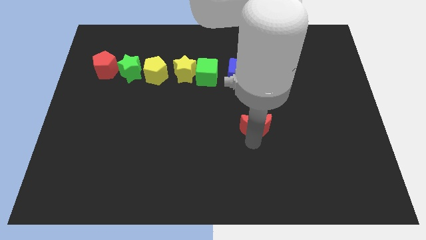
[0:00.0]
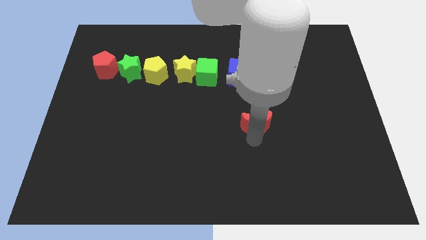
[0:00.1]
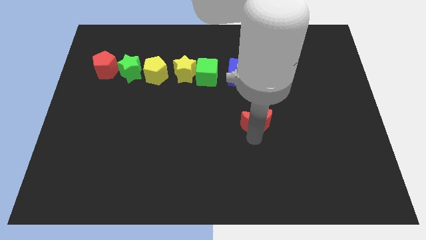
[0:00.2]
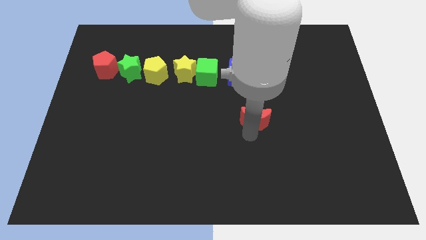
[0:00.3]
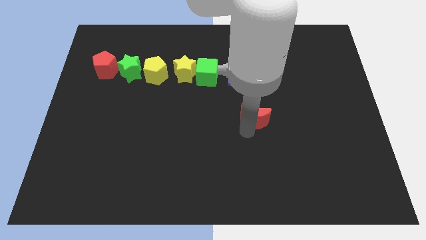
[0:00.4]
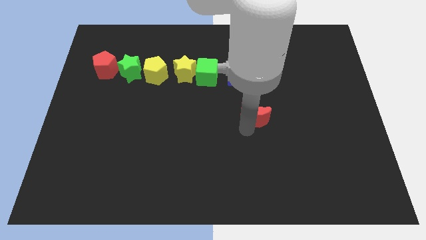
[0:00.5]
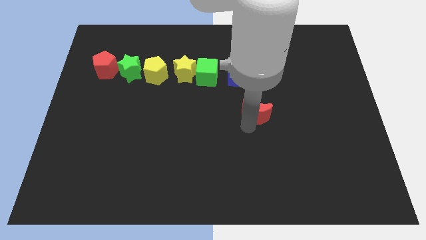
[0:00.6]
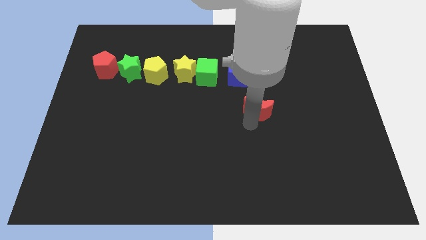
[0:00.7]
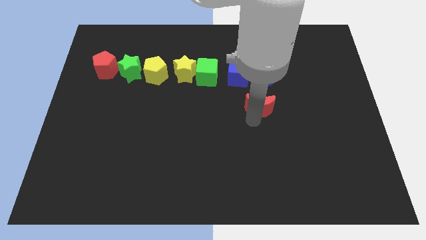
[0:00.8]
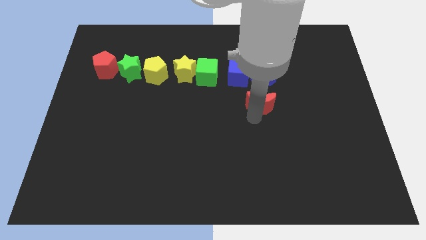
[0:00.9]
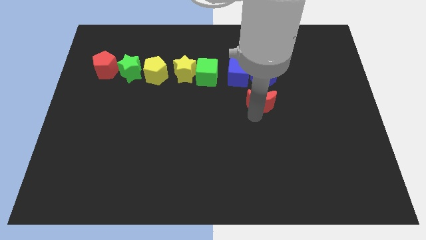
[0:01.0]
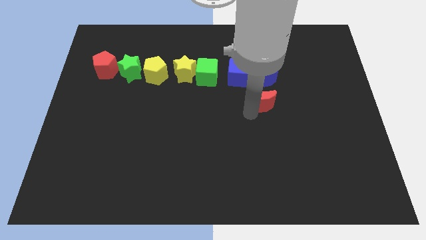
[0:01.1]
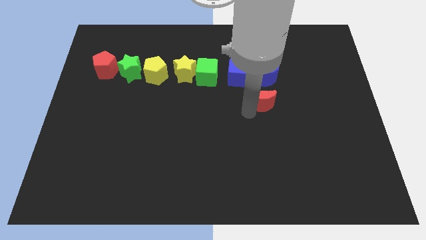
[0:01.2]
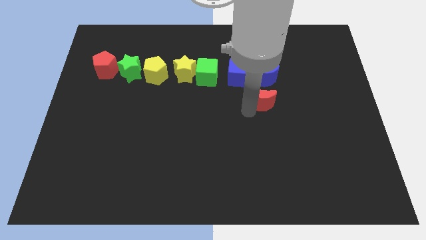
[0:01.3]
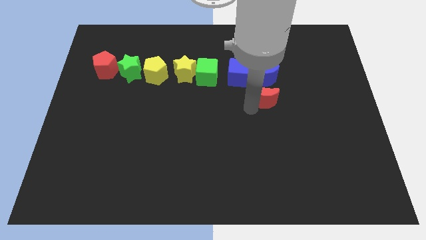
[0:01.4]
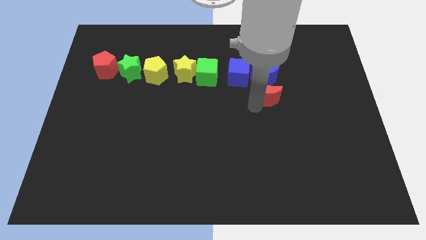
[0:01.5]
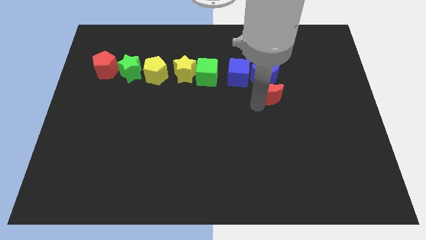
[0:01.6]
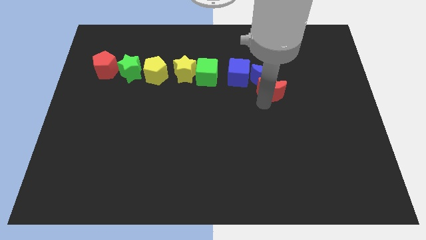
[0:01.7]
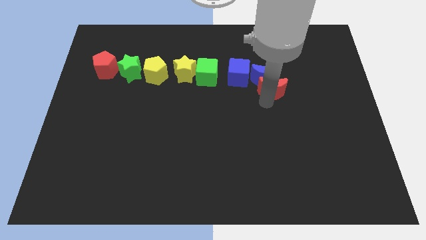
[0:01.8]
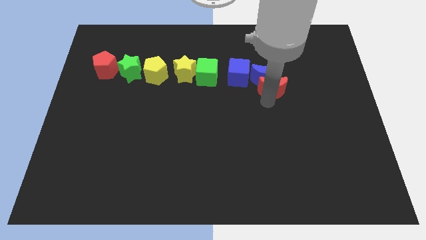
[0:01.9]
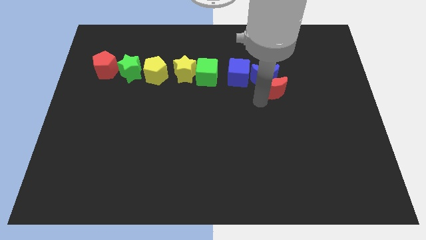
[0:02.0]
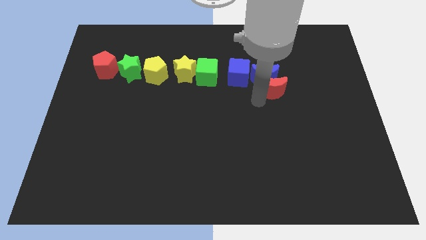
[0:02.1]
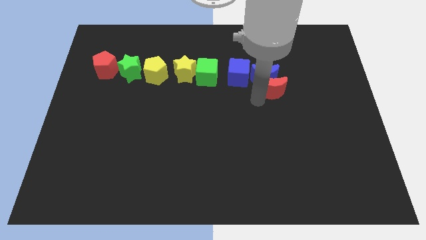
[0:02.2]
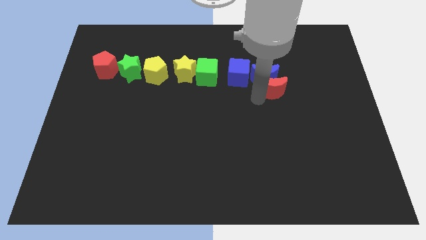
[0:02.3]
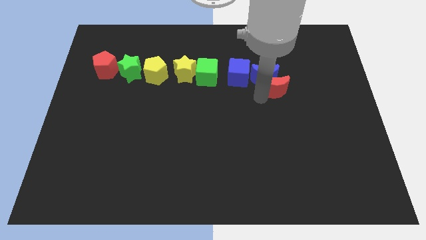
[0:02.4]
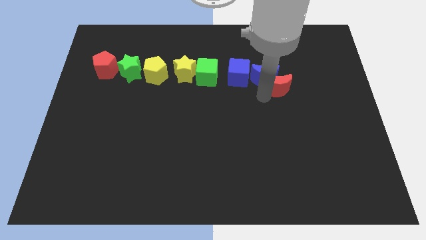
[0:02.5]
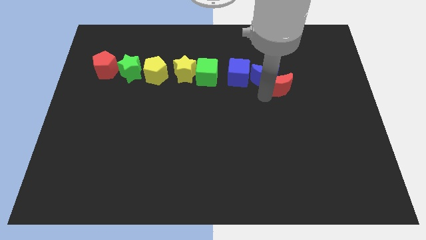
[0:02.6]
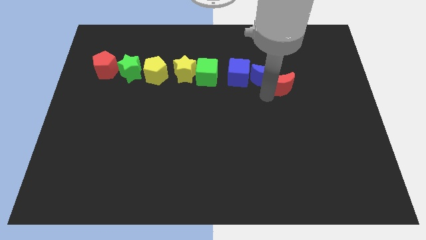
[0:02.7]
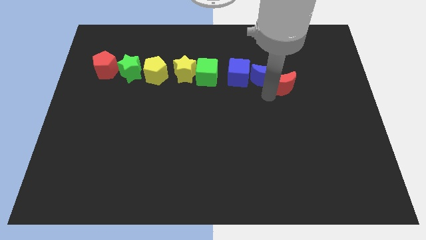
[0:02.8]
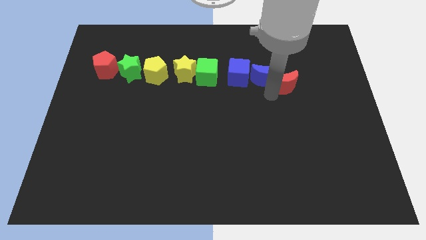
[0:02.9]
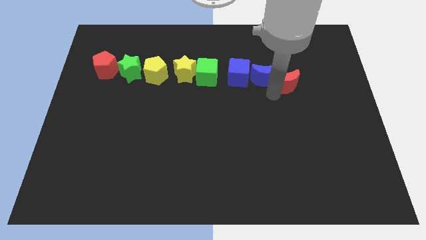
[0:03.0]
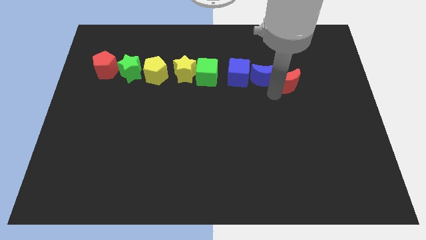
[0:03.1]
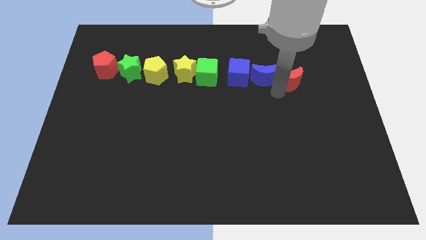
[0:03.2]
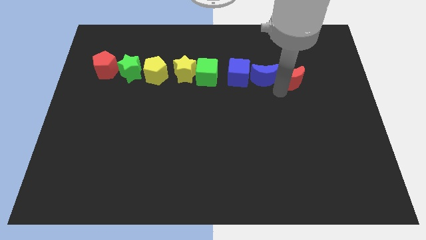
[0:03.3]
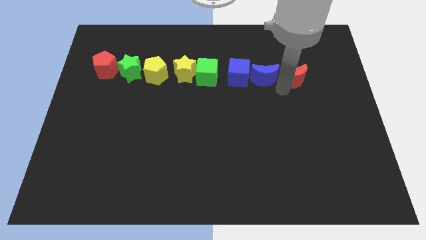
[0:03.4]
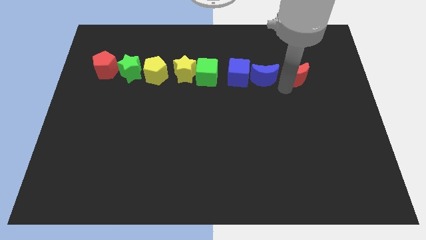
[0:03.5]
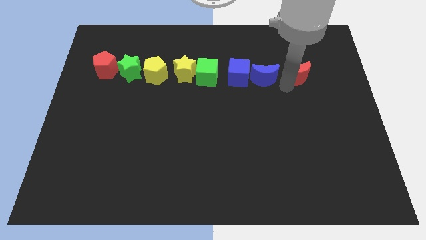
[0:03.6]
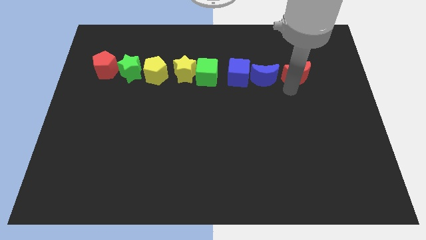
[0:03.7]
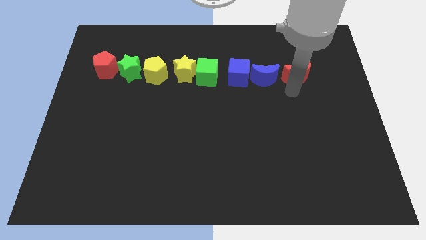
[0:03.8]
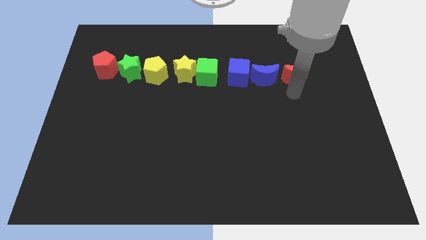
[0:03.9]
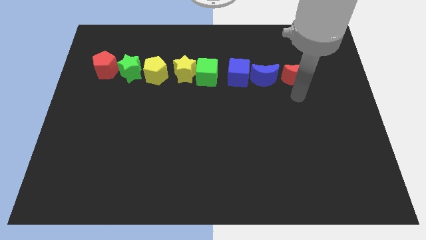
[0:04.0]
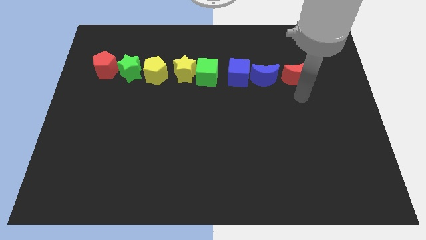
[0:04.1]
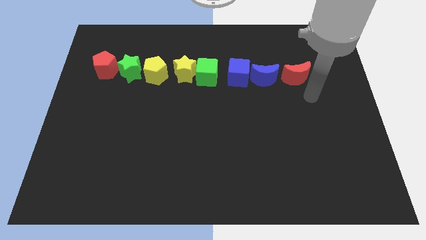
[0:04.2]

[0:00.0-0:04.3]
place red crescent beside blue crescent

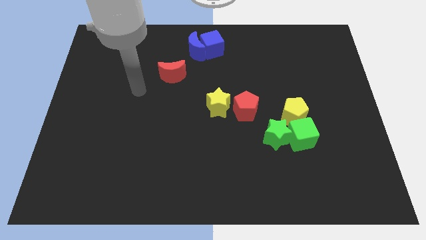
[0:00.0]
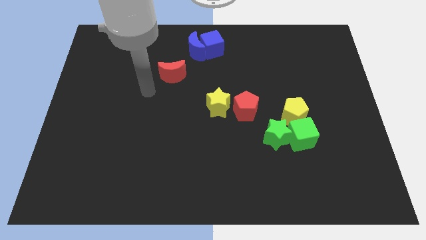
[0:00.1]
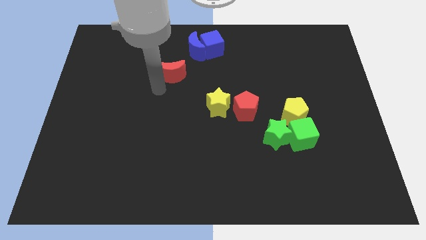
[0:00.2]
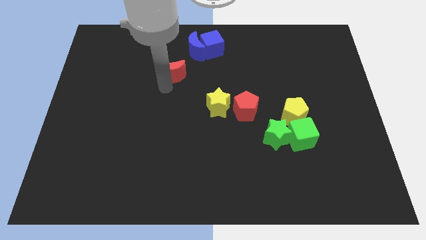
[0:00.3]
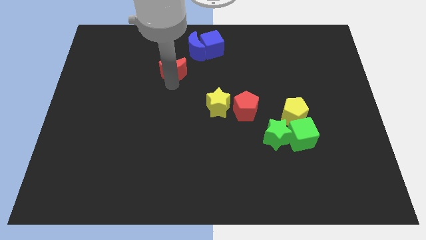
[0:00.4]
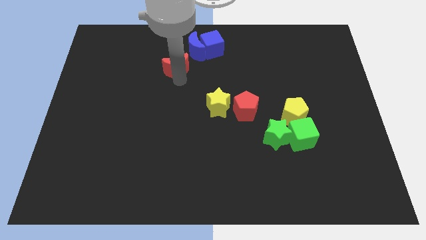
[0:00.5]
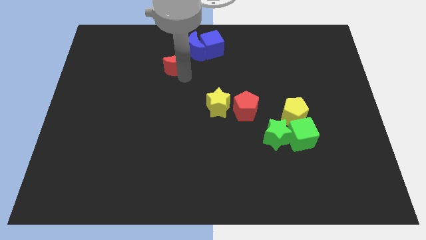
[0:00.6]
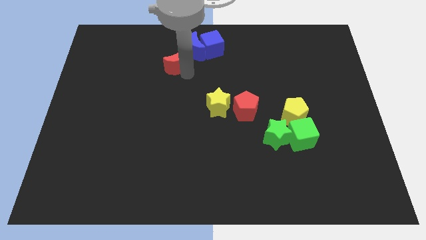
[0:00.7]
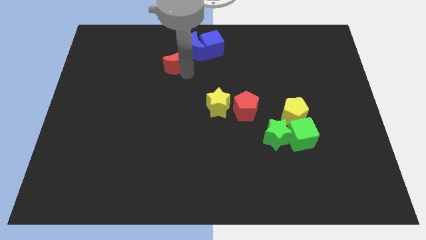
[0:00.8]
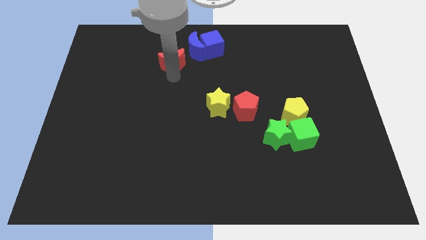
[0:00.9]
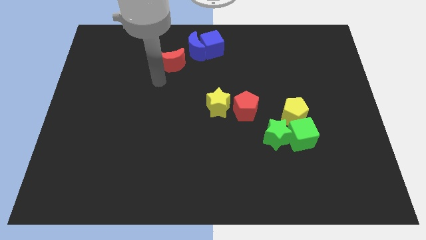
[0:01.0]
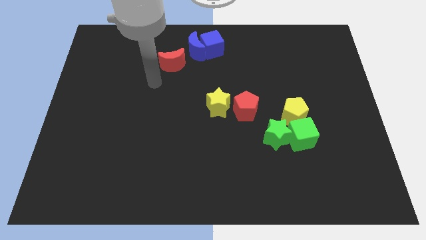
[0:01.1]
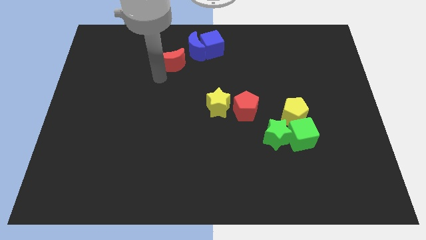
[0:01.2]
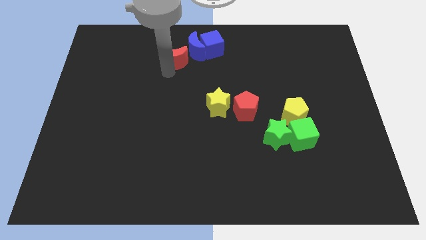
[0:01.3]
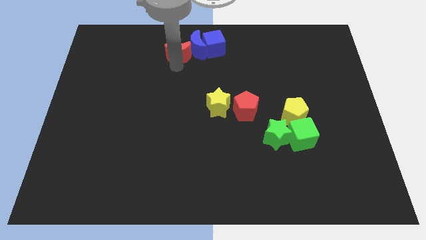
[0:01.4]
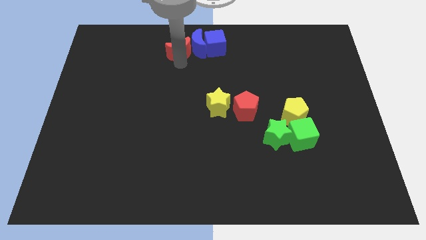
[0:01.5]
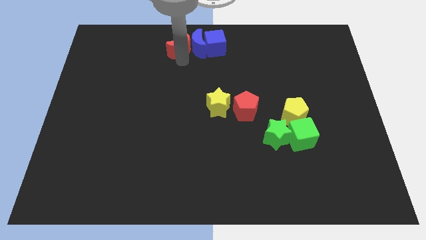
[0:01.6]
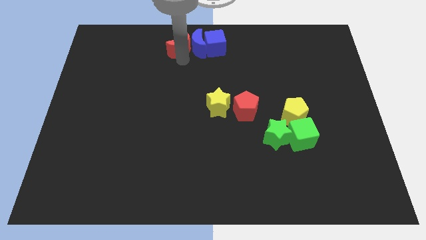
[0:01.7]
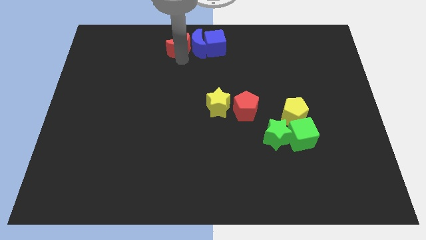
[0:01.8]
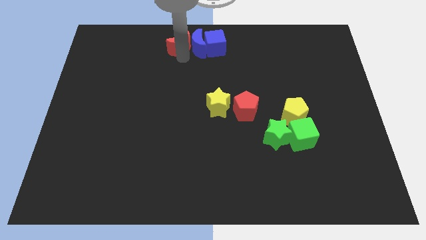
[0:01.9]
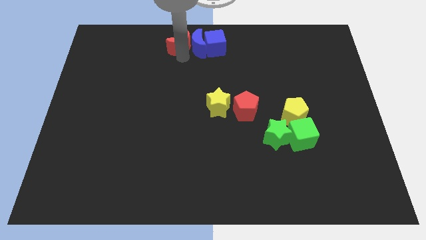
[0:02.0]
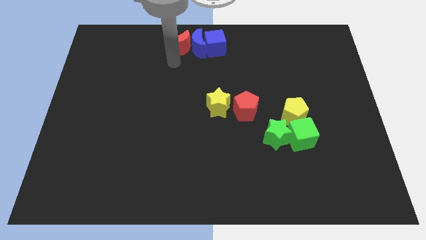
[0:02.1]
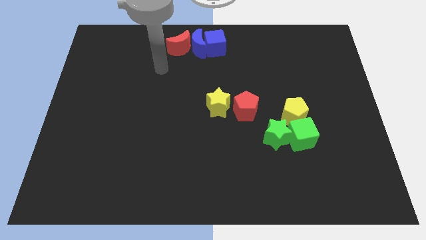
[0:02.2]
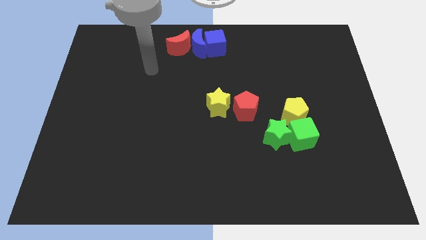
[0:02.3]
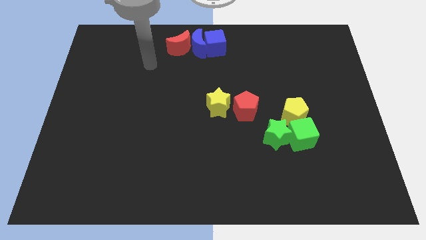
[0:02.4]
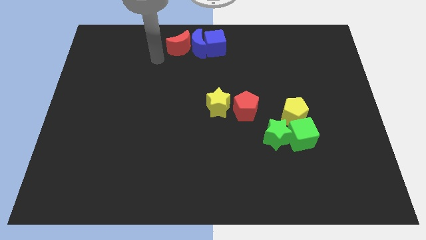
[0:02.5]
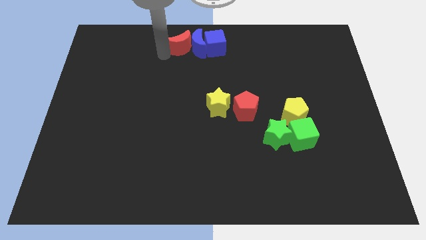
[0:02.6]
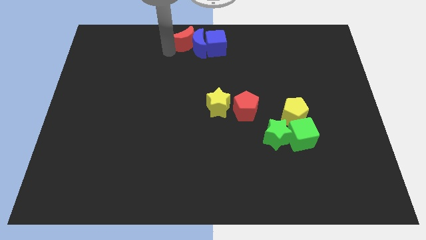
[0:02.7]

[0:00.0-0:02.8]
move the red moon to the left of the blue moon

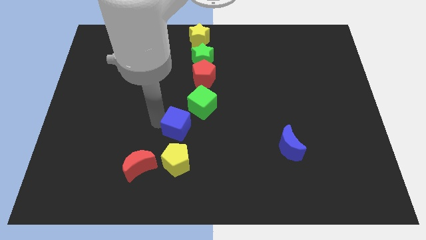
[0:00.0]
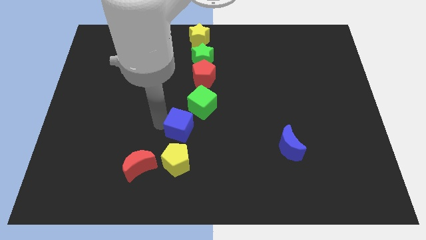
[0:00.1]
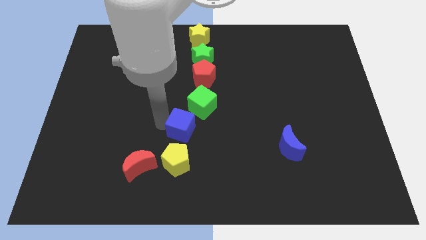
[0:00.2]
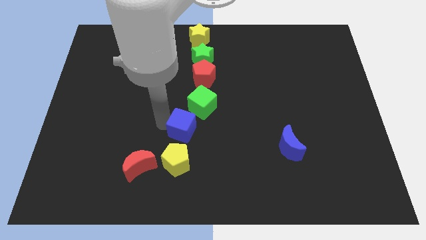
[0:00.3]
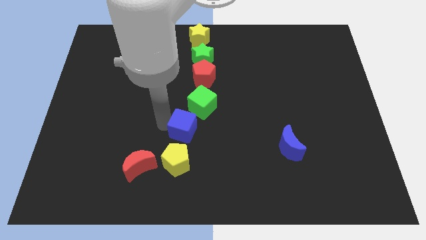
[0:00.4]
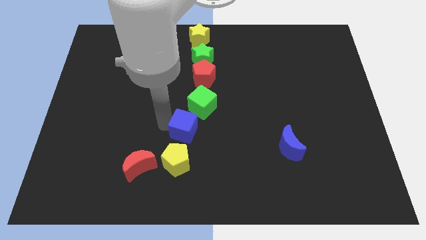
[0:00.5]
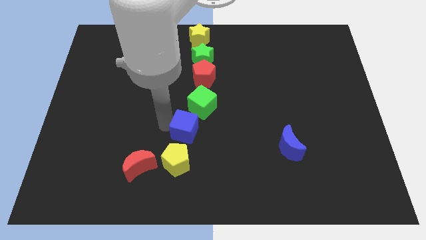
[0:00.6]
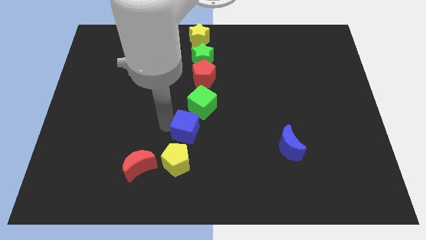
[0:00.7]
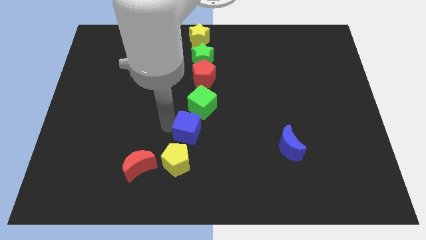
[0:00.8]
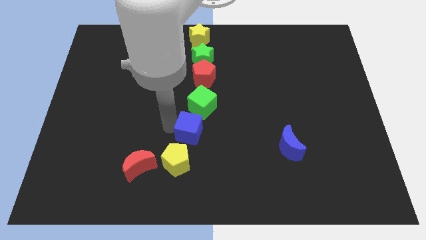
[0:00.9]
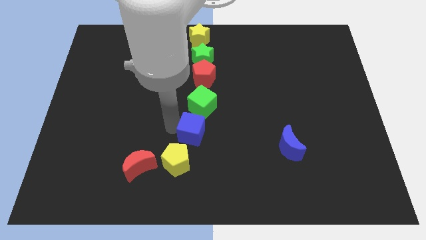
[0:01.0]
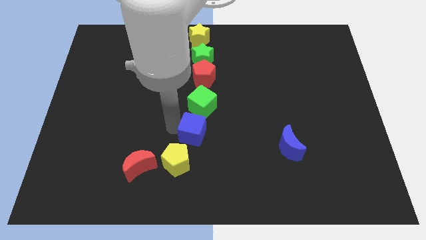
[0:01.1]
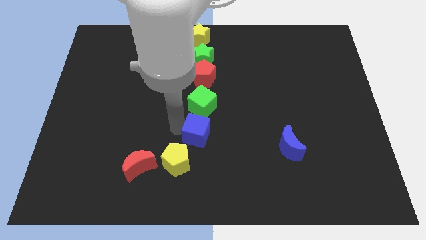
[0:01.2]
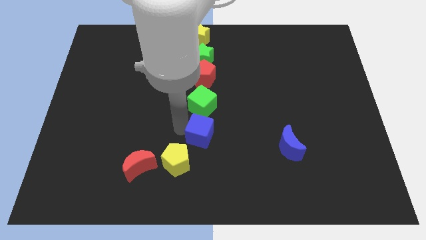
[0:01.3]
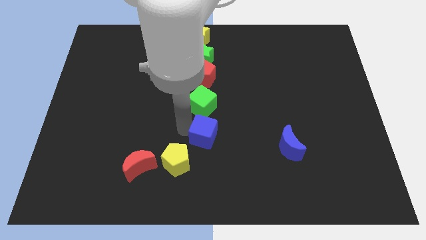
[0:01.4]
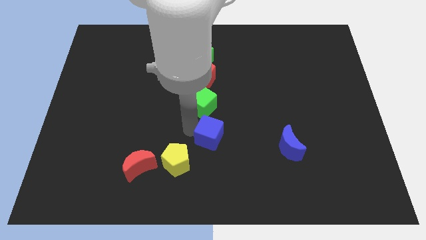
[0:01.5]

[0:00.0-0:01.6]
put the blue cube at the bottom of green cube

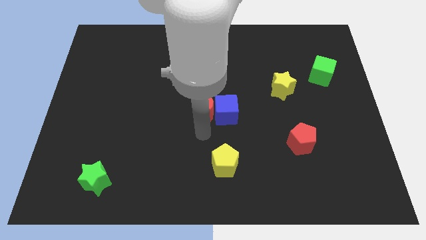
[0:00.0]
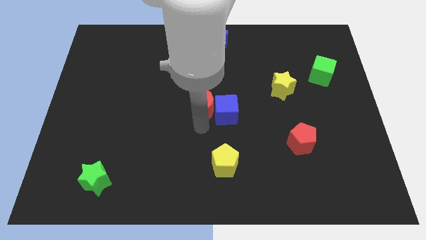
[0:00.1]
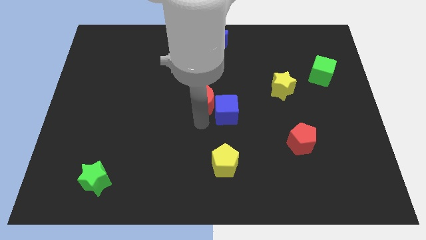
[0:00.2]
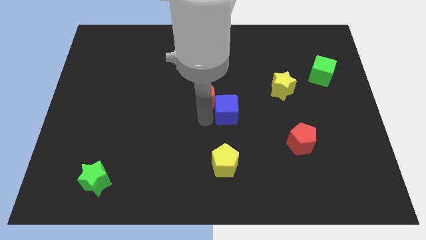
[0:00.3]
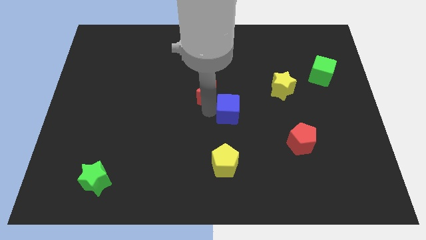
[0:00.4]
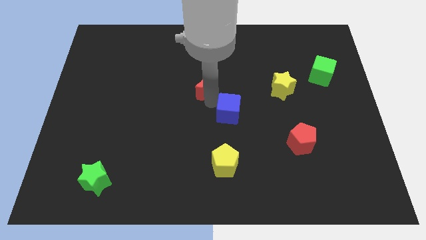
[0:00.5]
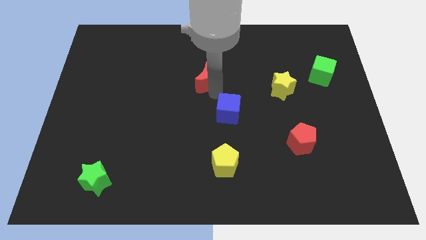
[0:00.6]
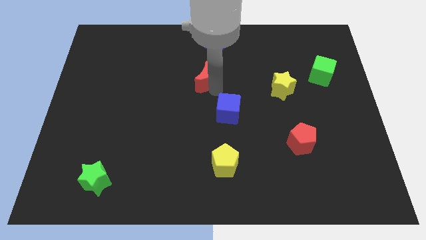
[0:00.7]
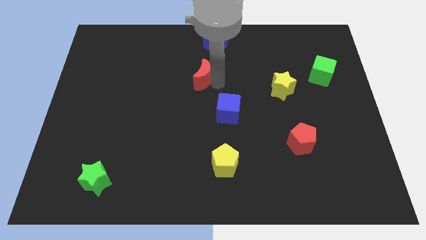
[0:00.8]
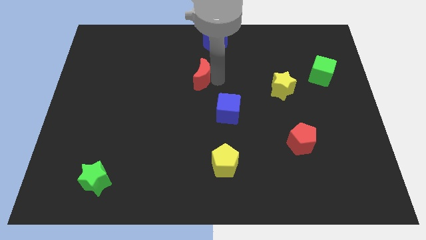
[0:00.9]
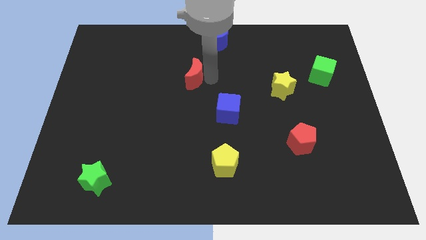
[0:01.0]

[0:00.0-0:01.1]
move the red crescent diagonally top left to the blue cube
